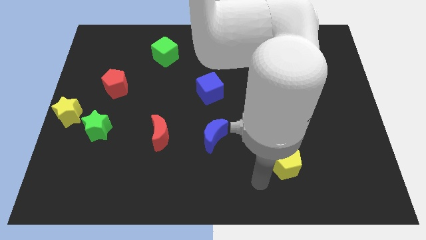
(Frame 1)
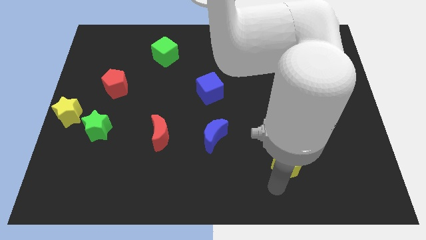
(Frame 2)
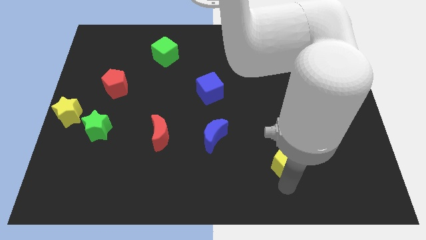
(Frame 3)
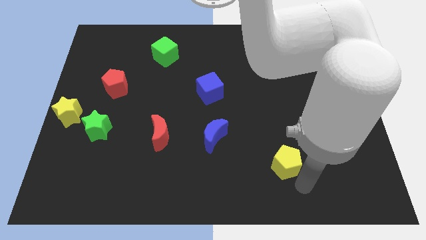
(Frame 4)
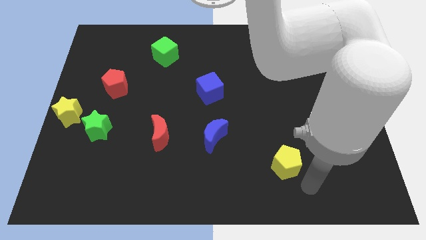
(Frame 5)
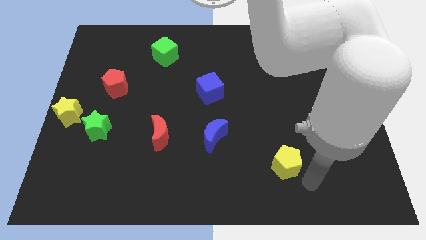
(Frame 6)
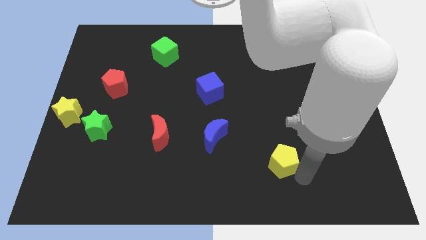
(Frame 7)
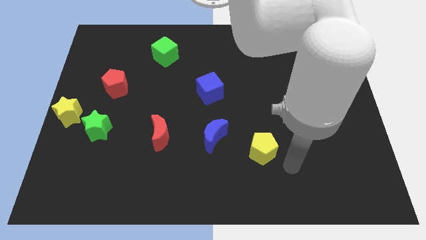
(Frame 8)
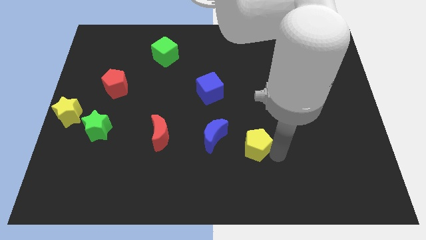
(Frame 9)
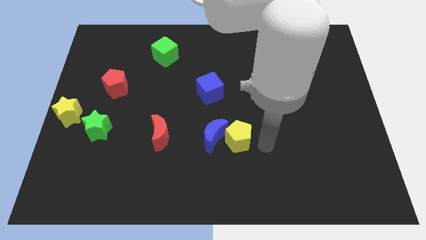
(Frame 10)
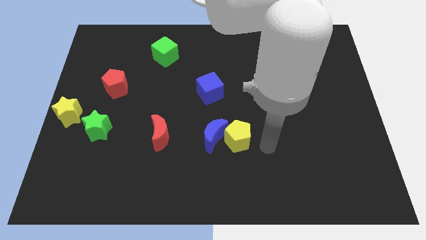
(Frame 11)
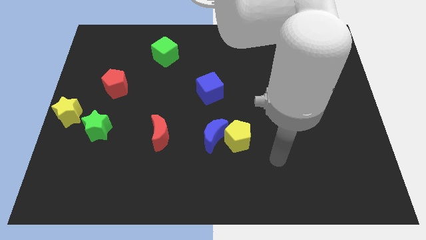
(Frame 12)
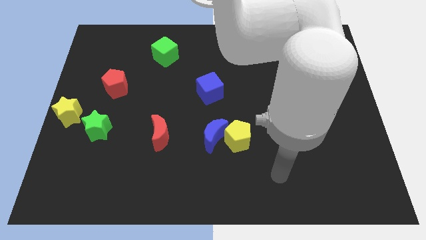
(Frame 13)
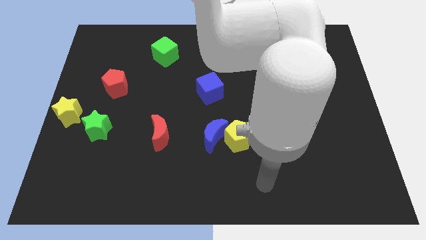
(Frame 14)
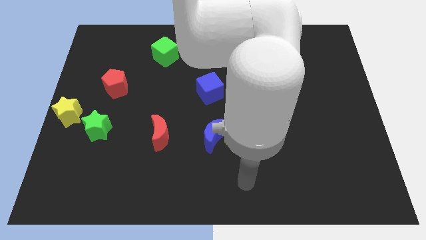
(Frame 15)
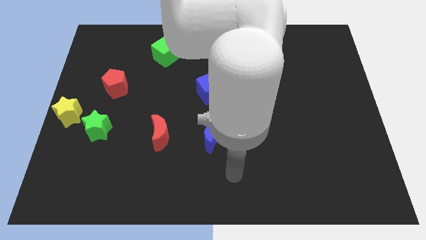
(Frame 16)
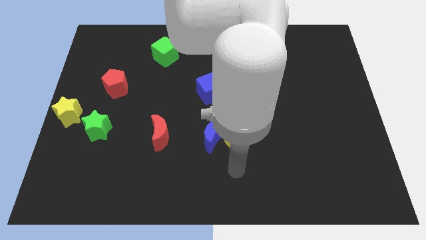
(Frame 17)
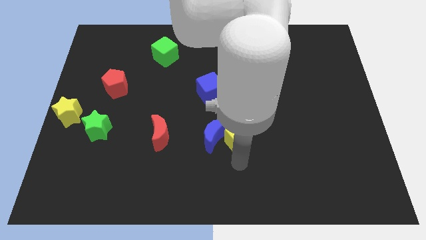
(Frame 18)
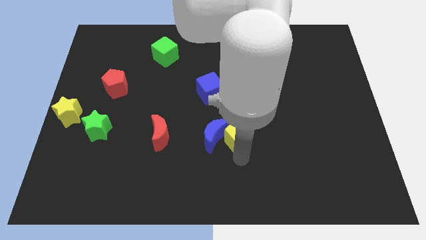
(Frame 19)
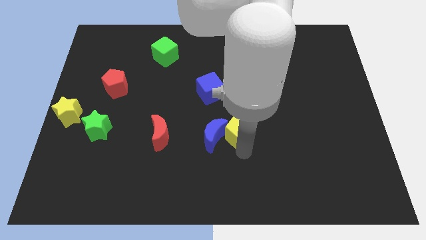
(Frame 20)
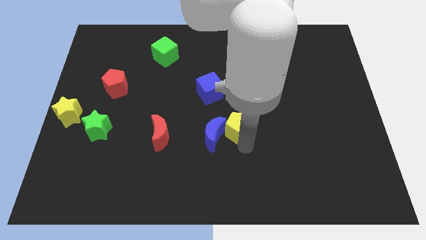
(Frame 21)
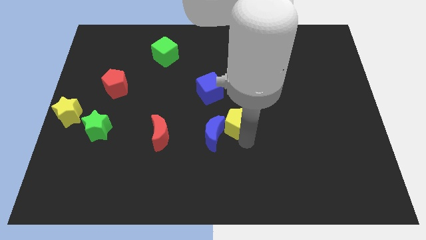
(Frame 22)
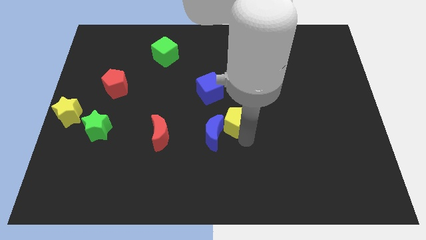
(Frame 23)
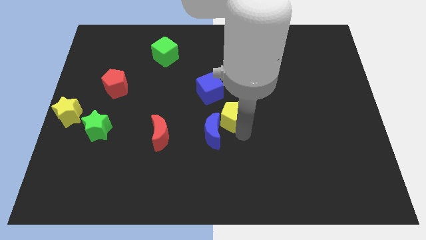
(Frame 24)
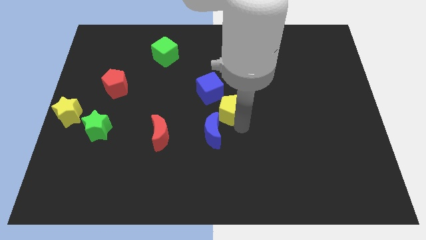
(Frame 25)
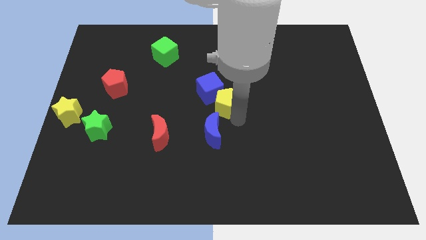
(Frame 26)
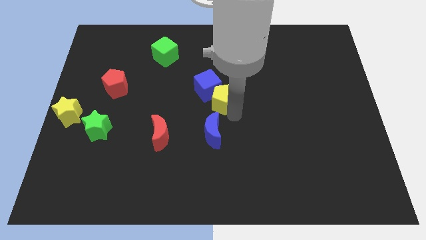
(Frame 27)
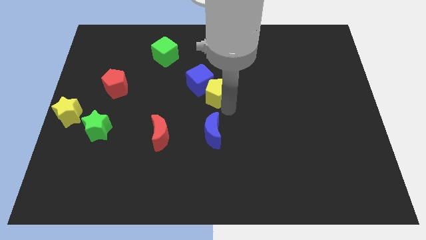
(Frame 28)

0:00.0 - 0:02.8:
put the yellow pentagon between the blue cube and blue moon

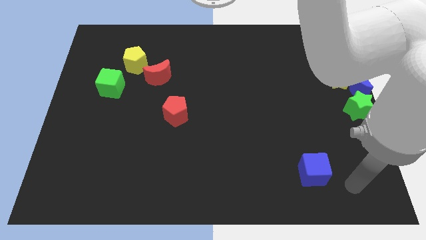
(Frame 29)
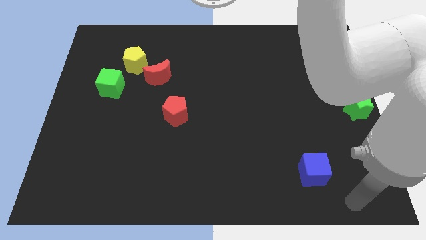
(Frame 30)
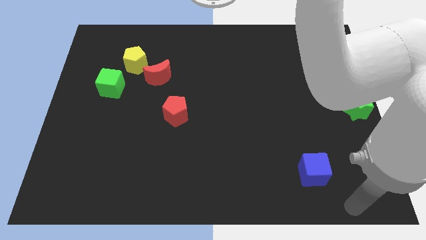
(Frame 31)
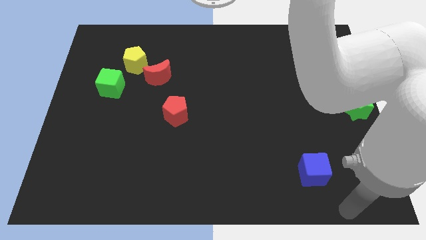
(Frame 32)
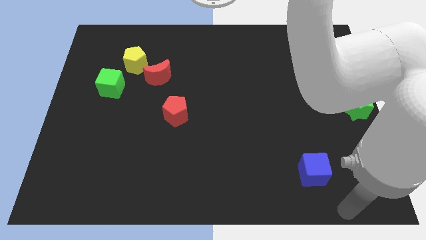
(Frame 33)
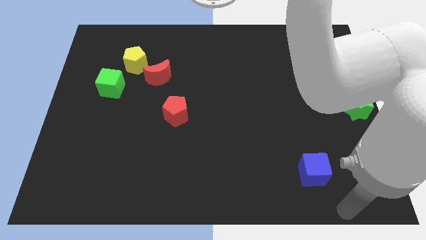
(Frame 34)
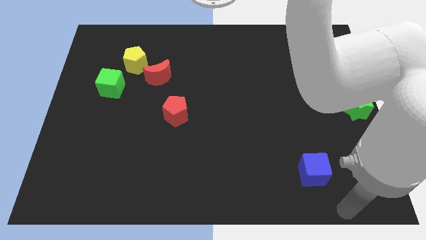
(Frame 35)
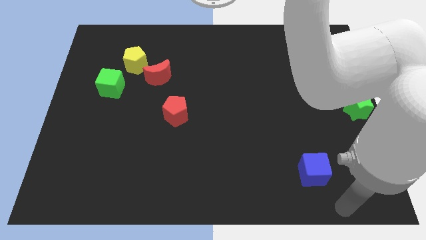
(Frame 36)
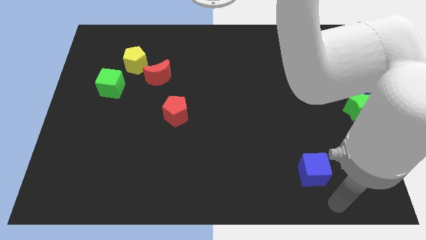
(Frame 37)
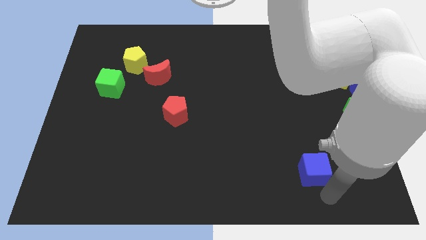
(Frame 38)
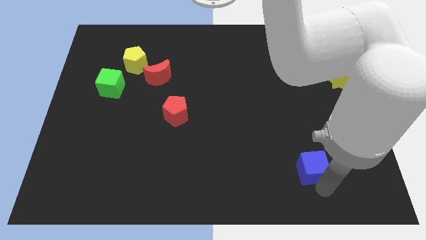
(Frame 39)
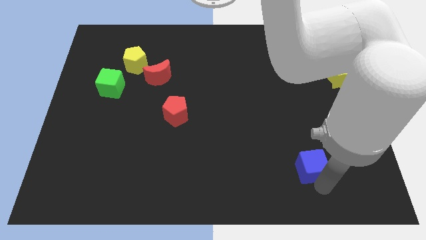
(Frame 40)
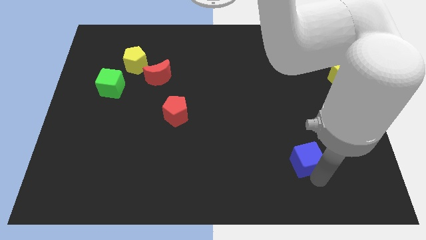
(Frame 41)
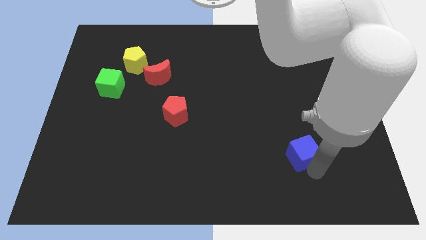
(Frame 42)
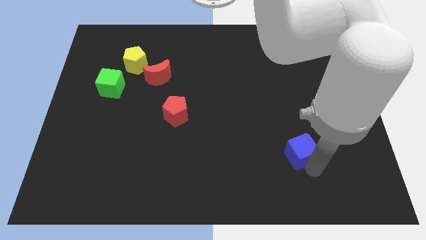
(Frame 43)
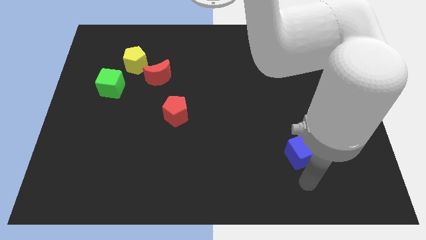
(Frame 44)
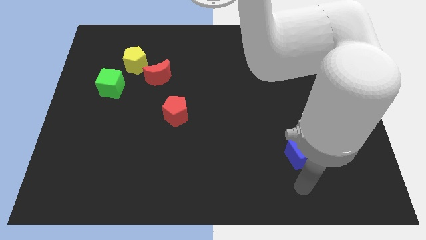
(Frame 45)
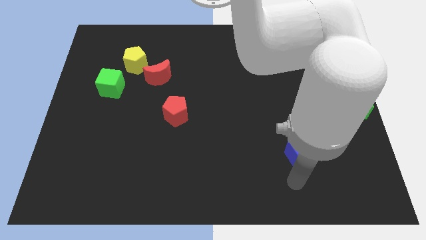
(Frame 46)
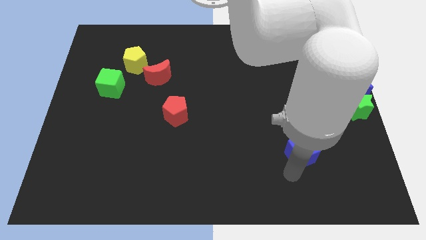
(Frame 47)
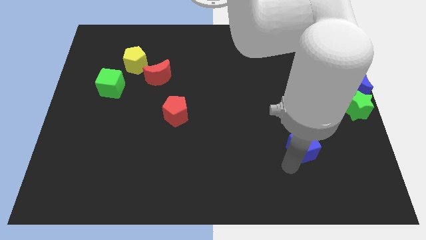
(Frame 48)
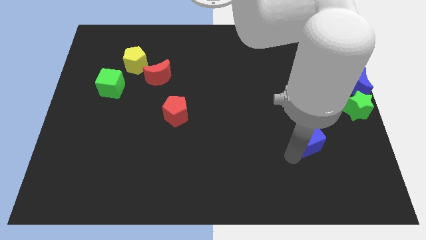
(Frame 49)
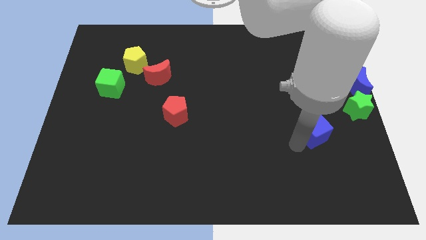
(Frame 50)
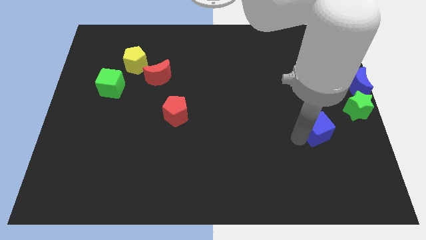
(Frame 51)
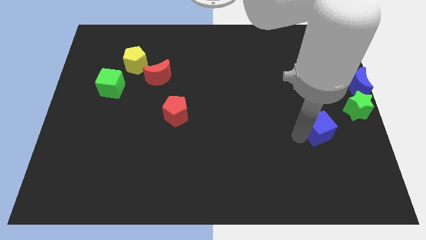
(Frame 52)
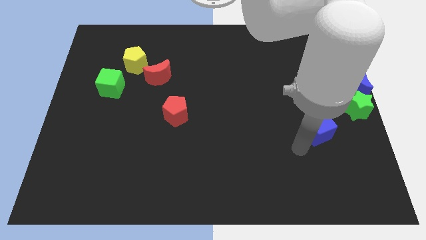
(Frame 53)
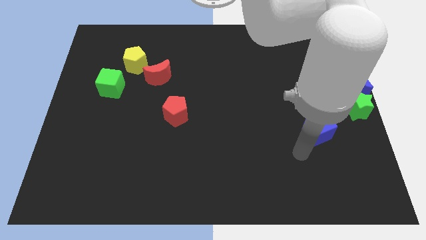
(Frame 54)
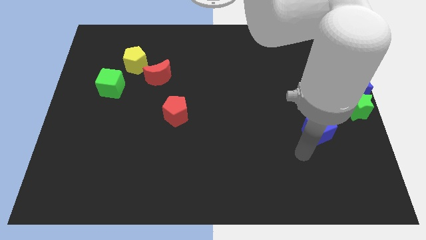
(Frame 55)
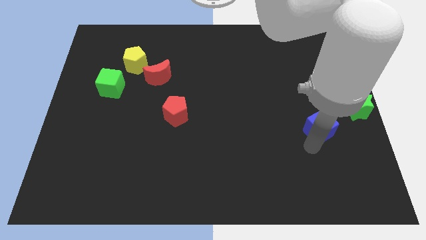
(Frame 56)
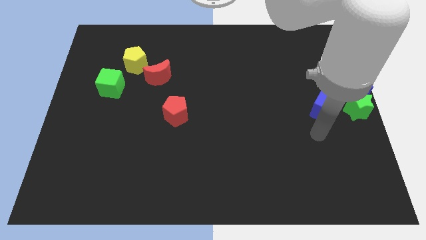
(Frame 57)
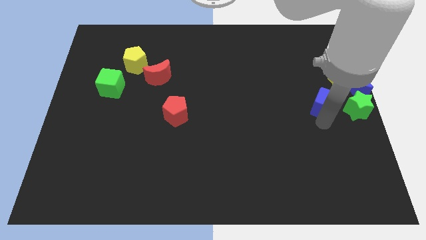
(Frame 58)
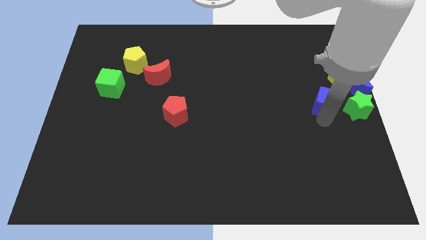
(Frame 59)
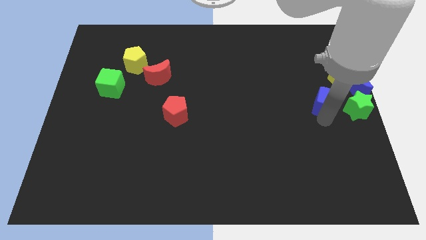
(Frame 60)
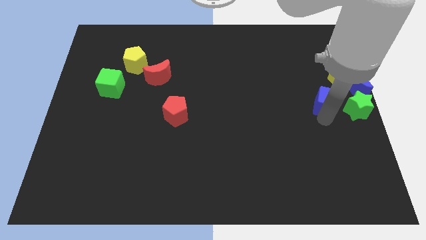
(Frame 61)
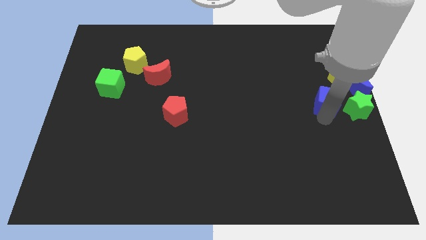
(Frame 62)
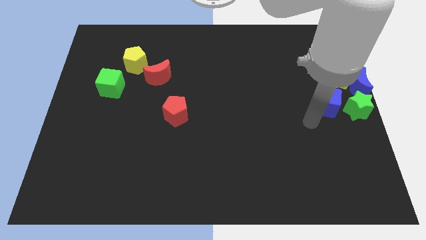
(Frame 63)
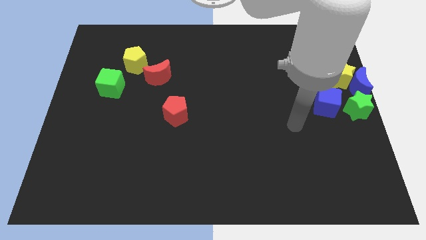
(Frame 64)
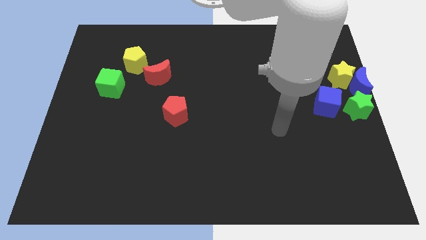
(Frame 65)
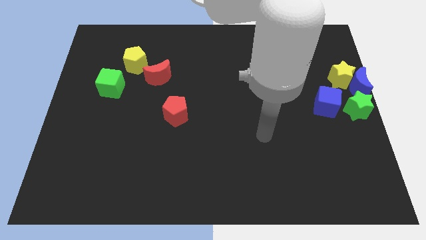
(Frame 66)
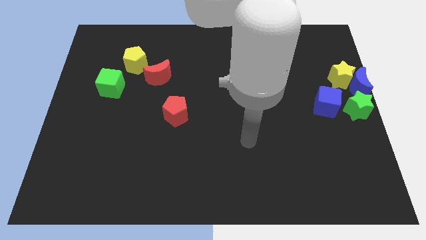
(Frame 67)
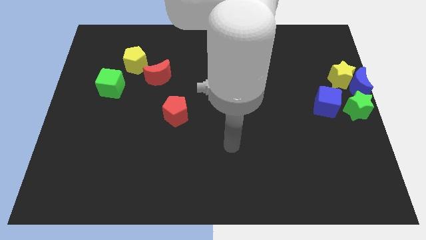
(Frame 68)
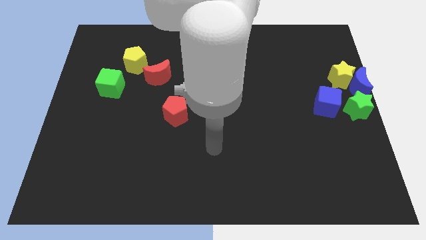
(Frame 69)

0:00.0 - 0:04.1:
place the blue cube close towards the left of green star

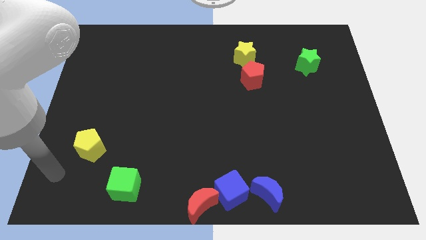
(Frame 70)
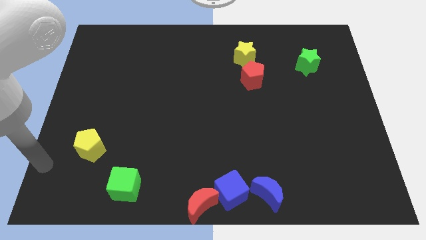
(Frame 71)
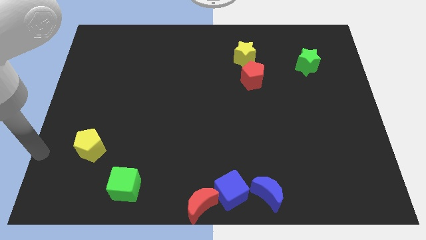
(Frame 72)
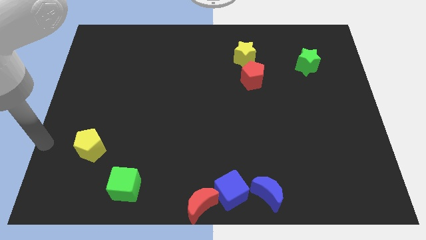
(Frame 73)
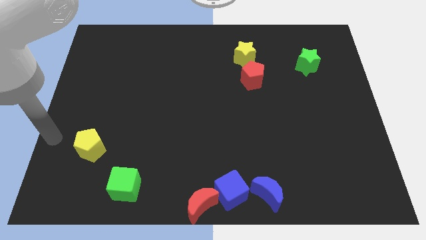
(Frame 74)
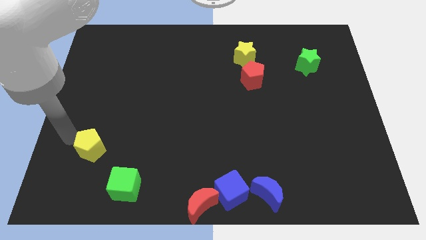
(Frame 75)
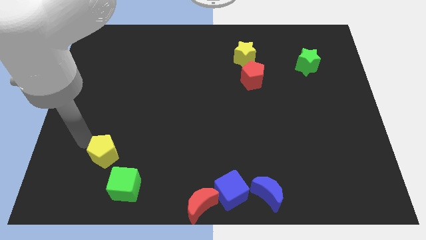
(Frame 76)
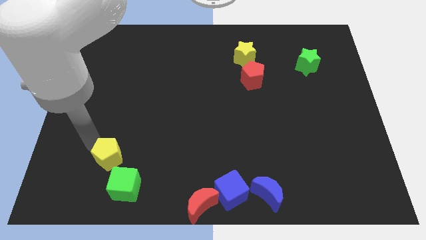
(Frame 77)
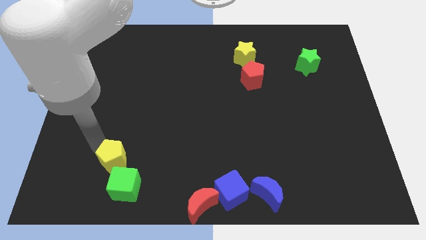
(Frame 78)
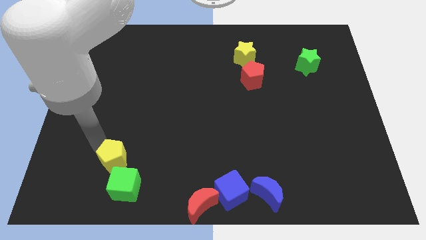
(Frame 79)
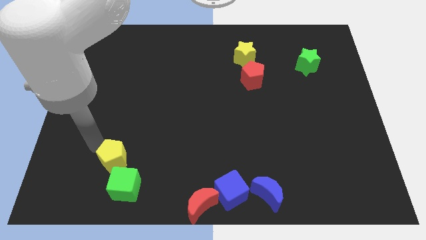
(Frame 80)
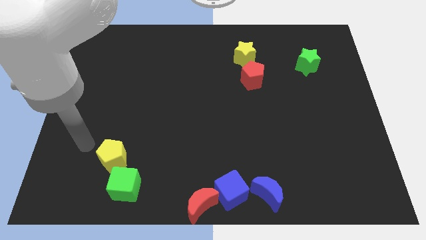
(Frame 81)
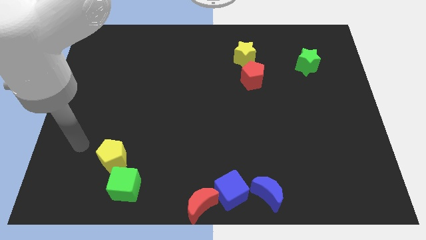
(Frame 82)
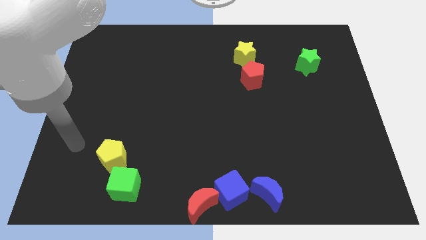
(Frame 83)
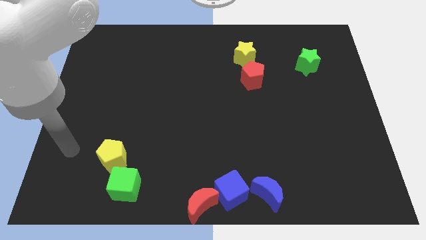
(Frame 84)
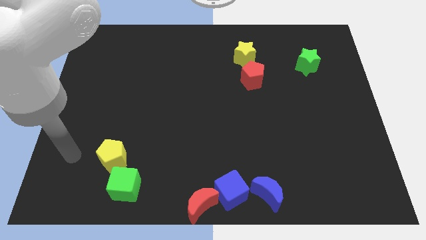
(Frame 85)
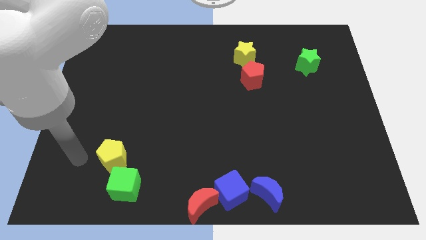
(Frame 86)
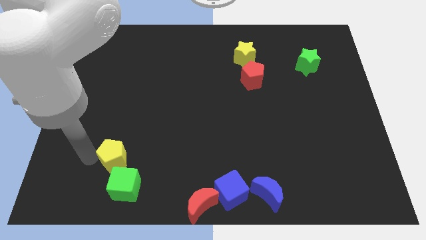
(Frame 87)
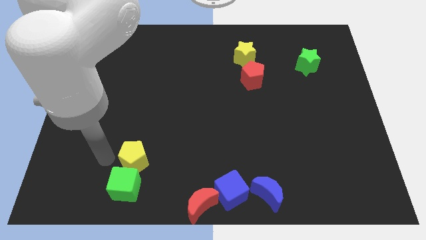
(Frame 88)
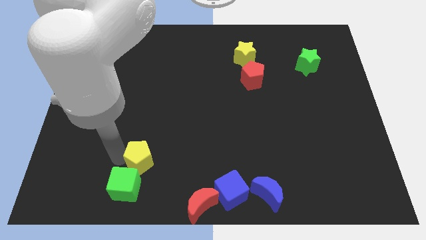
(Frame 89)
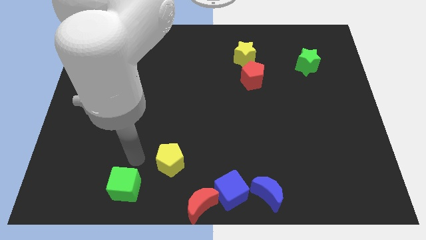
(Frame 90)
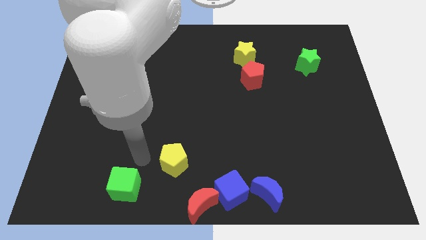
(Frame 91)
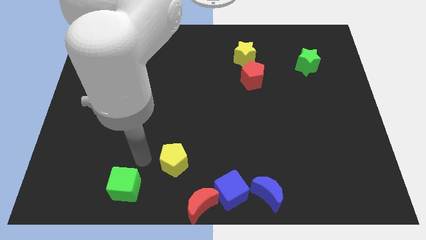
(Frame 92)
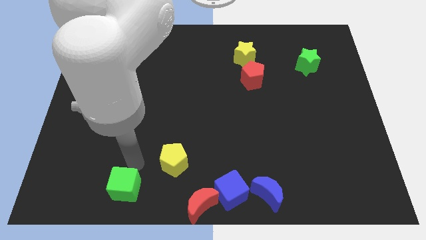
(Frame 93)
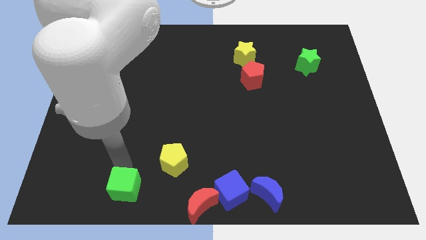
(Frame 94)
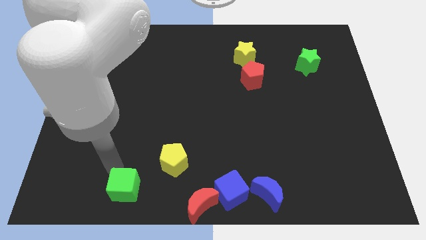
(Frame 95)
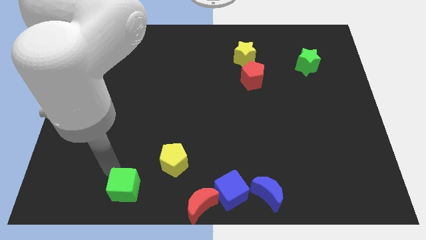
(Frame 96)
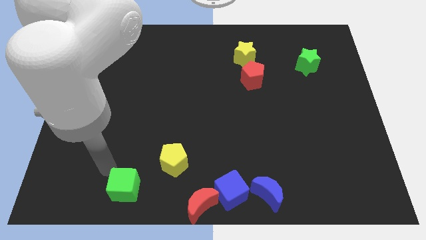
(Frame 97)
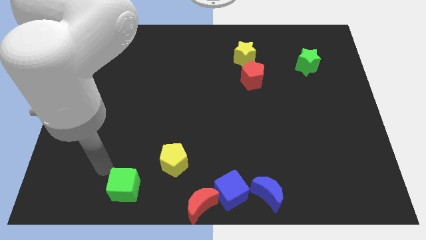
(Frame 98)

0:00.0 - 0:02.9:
move the yellow pentagon to the top left of the red crescent
